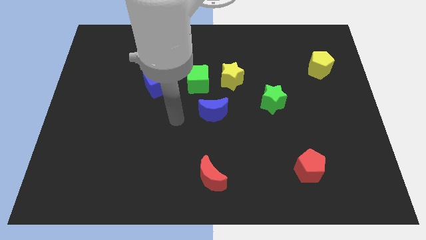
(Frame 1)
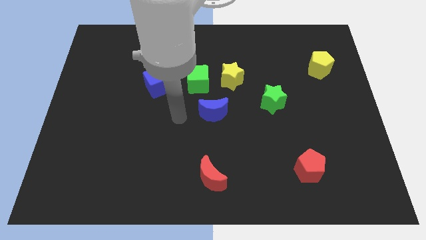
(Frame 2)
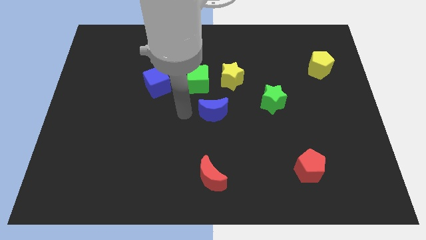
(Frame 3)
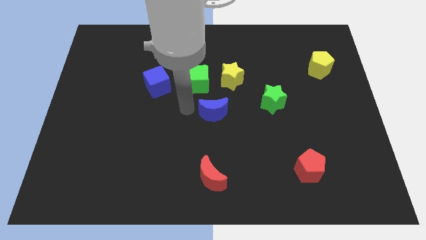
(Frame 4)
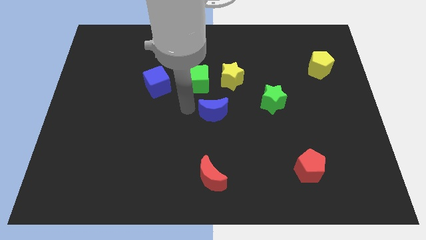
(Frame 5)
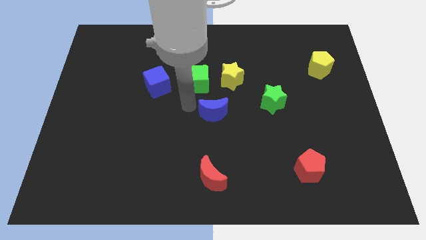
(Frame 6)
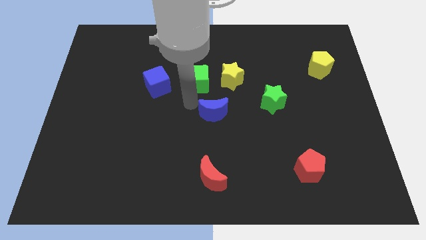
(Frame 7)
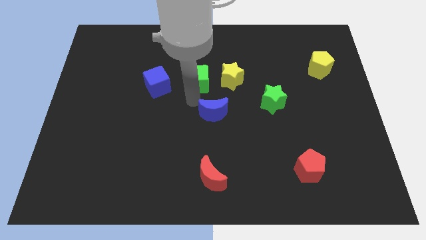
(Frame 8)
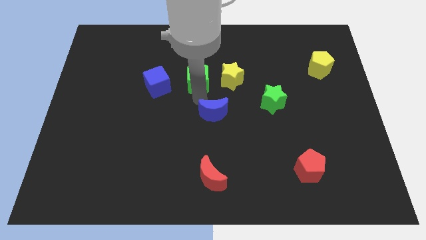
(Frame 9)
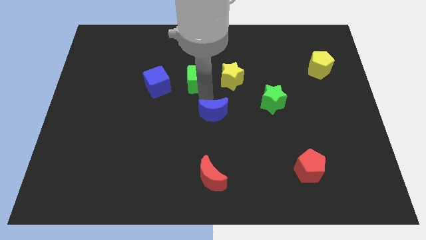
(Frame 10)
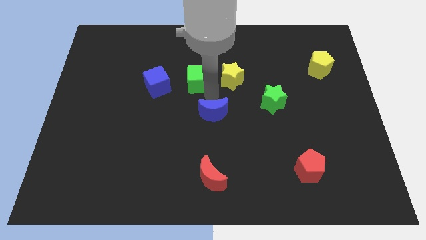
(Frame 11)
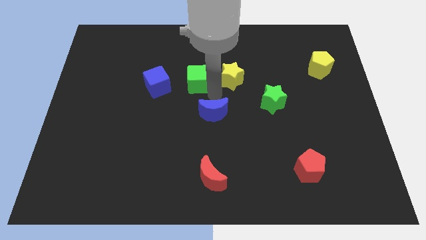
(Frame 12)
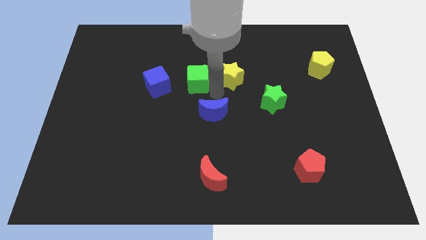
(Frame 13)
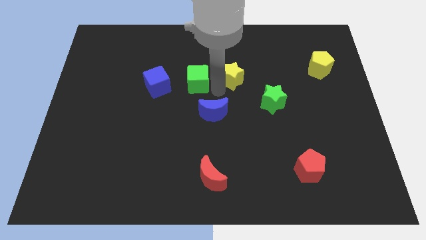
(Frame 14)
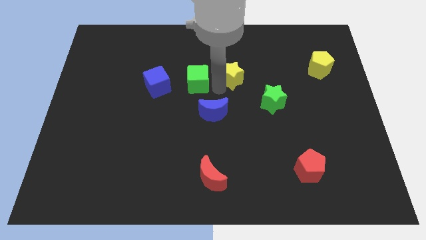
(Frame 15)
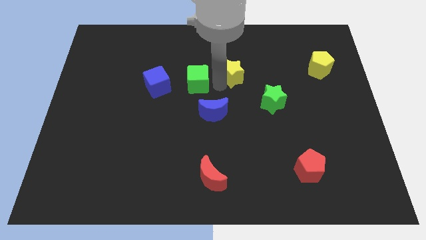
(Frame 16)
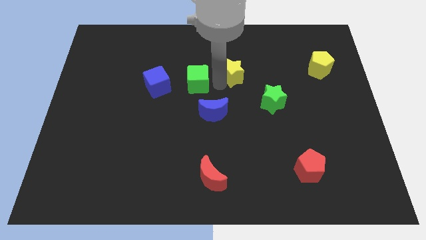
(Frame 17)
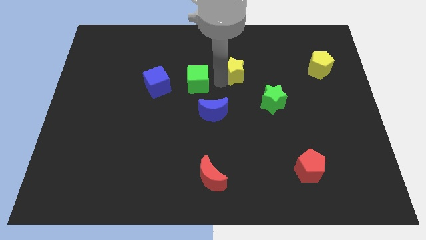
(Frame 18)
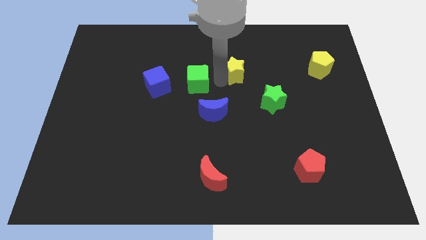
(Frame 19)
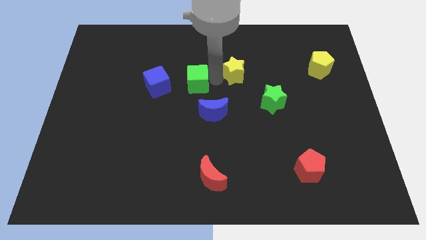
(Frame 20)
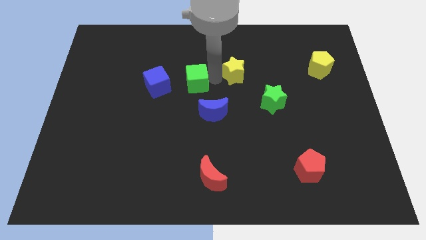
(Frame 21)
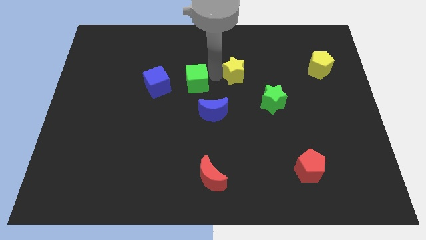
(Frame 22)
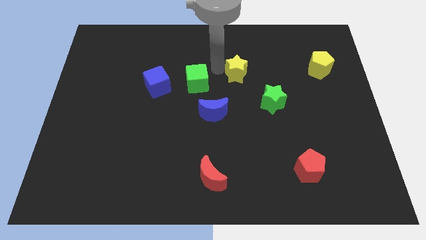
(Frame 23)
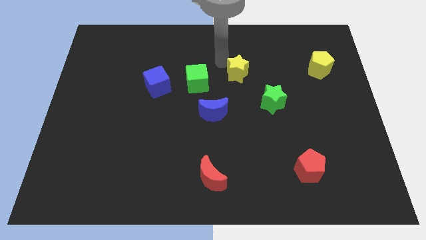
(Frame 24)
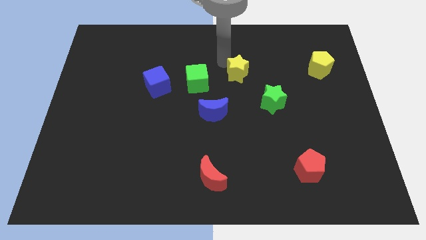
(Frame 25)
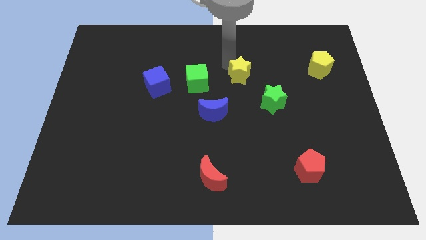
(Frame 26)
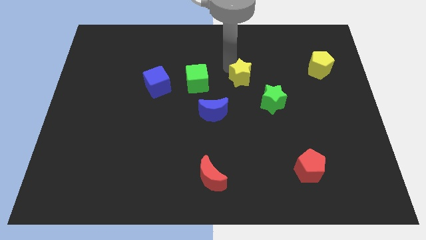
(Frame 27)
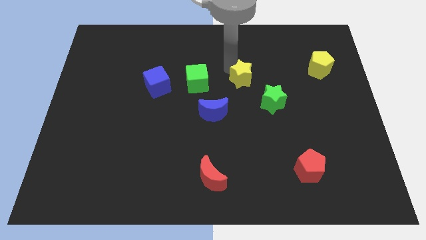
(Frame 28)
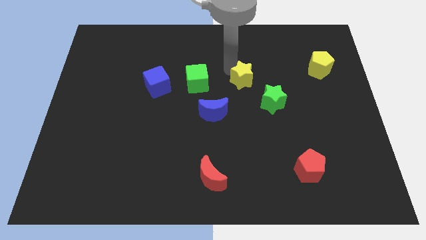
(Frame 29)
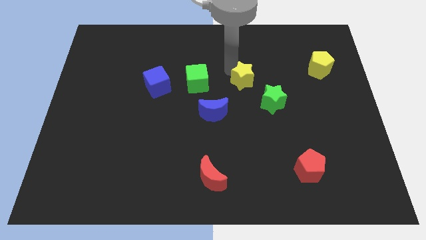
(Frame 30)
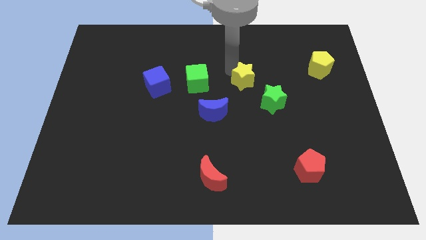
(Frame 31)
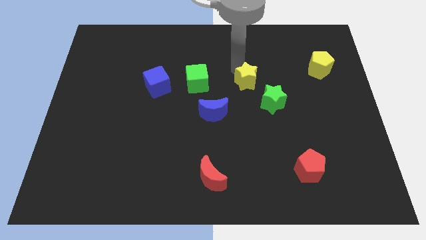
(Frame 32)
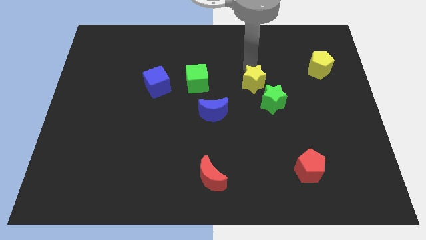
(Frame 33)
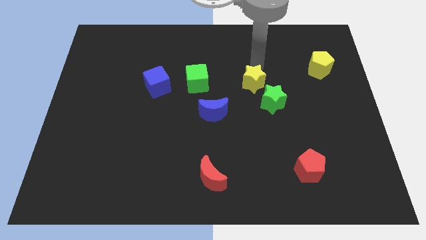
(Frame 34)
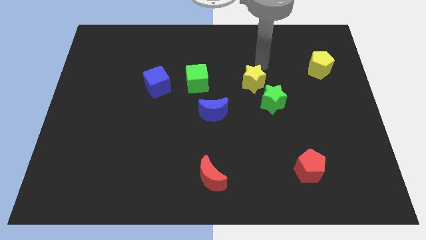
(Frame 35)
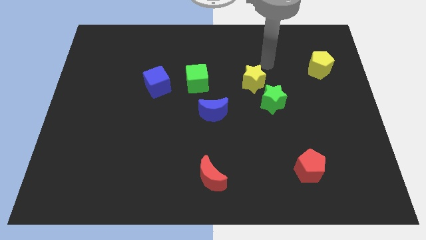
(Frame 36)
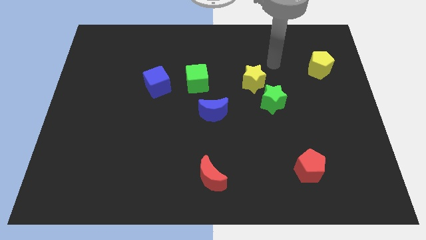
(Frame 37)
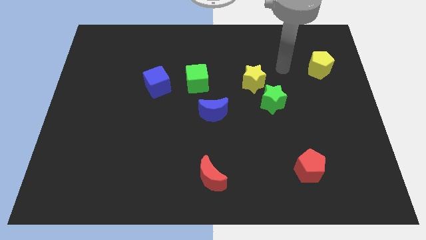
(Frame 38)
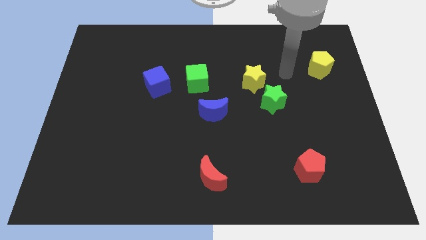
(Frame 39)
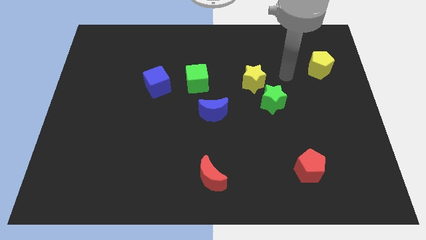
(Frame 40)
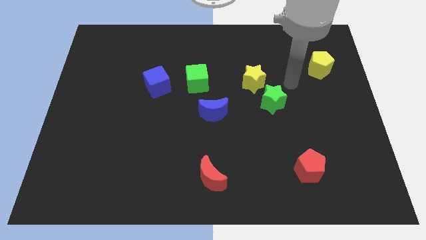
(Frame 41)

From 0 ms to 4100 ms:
place the yellow star to the top left of green star

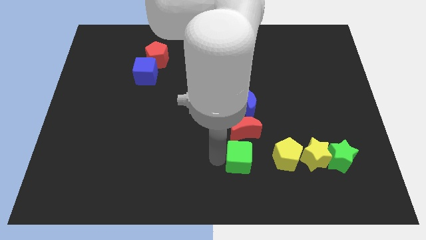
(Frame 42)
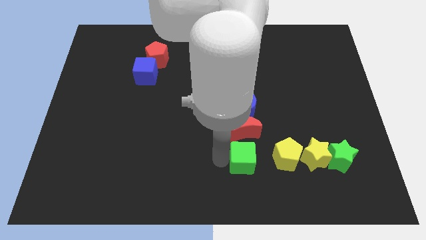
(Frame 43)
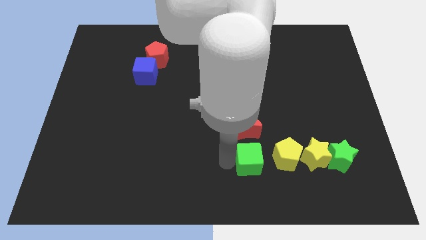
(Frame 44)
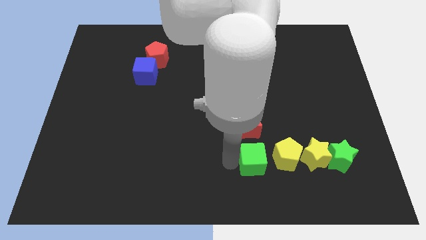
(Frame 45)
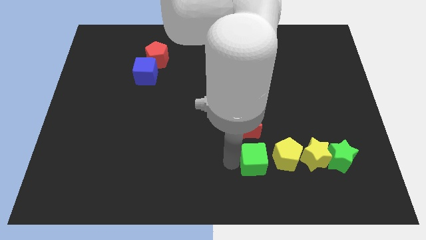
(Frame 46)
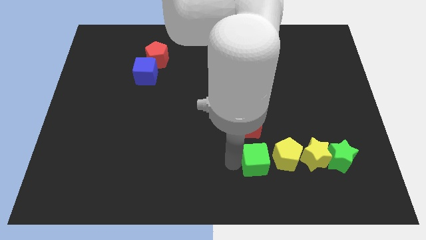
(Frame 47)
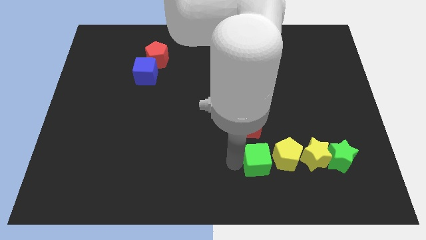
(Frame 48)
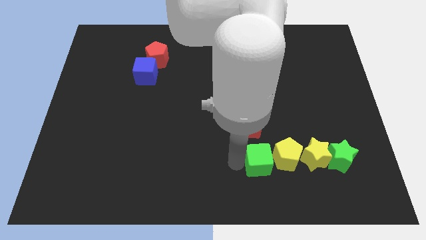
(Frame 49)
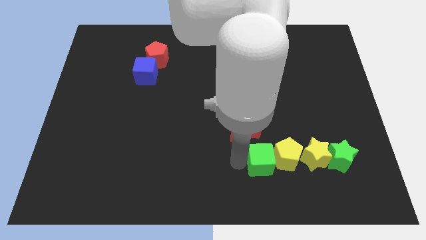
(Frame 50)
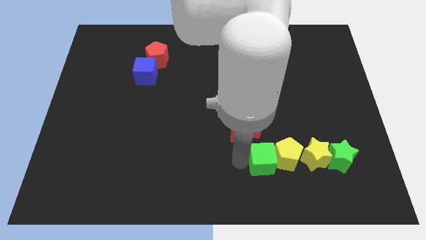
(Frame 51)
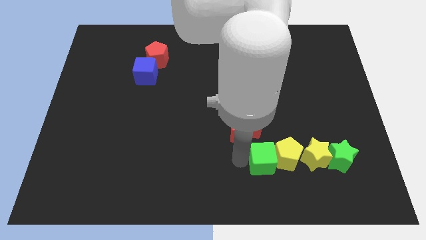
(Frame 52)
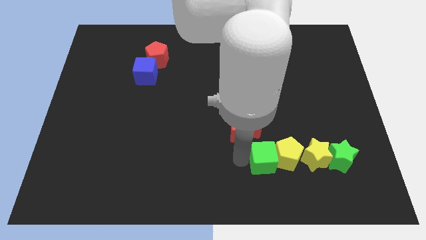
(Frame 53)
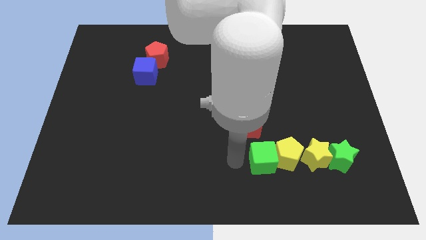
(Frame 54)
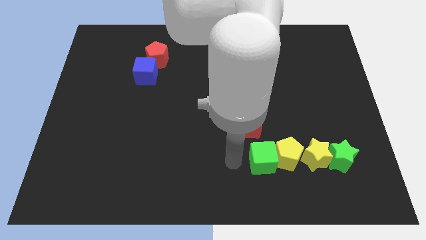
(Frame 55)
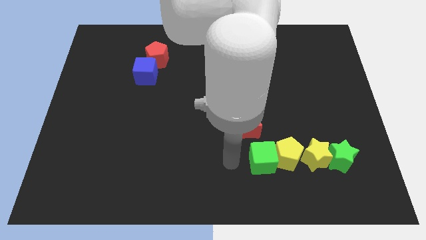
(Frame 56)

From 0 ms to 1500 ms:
push the green cube into the yellow pentagon

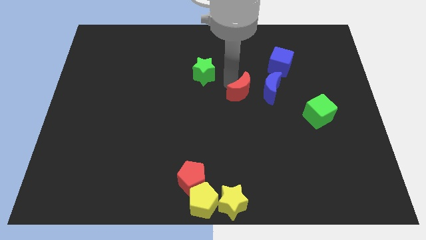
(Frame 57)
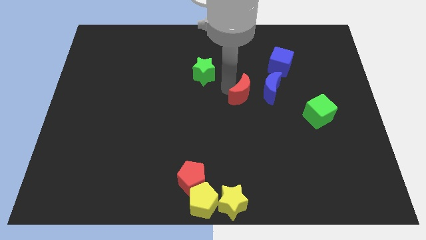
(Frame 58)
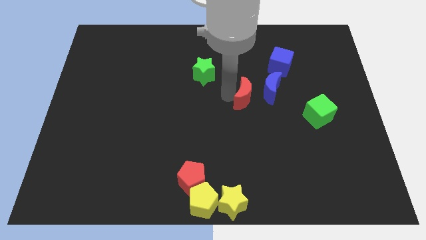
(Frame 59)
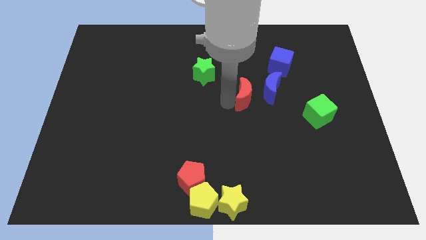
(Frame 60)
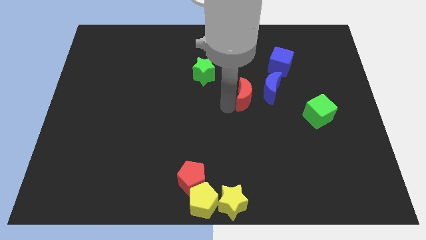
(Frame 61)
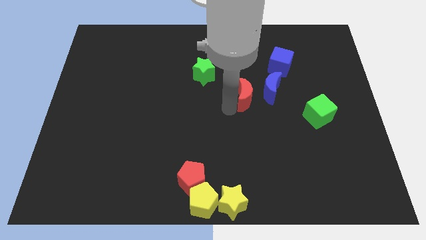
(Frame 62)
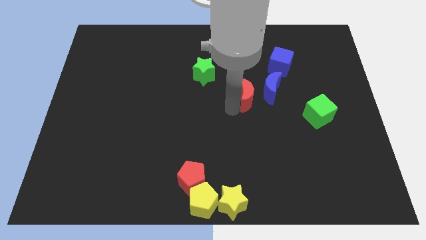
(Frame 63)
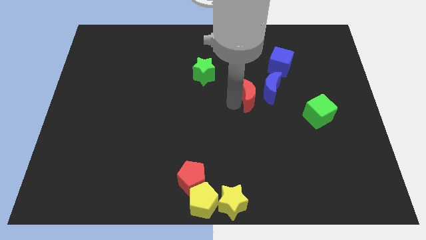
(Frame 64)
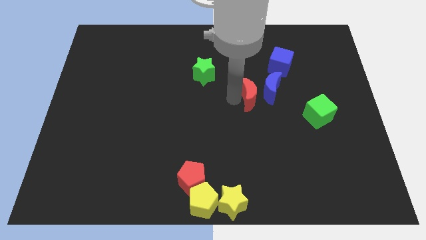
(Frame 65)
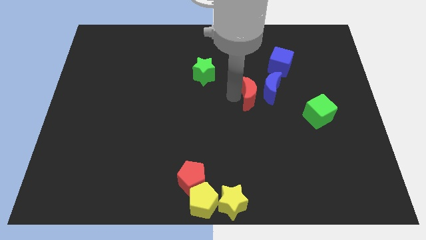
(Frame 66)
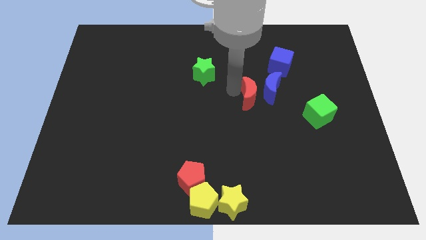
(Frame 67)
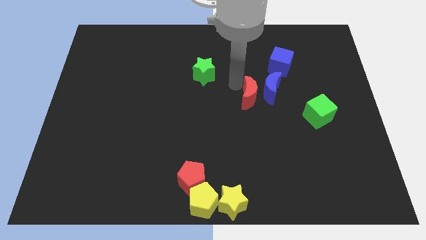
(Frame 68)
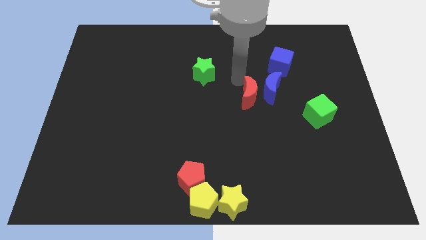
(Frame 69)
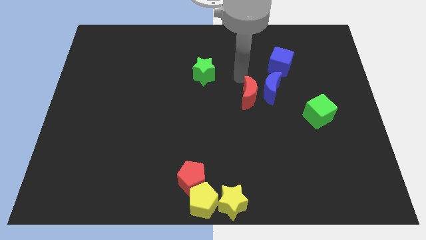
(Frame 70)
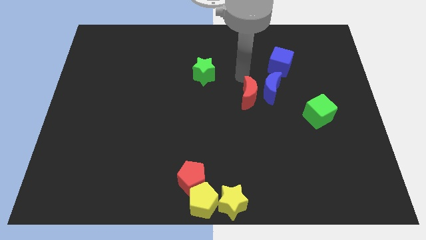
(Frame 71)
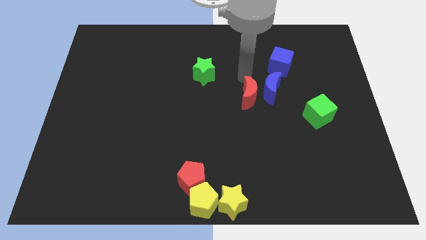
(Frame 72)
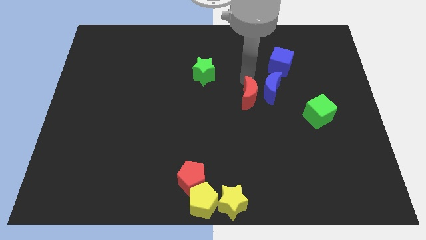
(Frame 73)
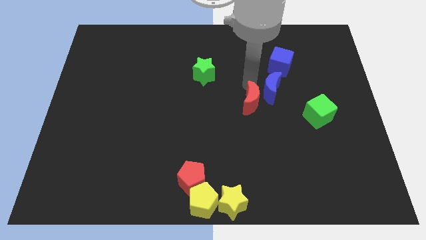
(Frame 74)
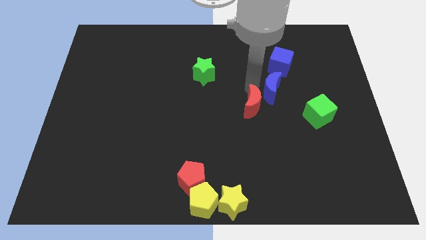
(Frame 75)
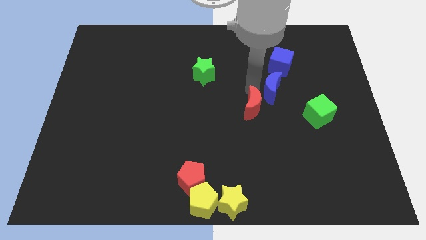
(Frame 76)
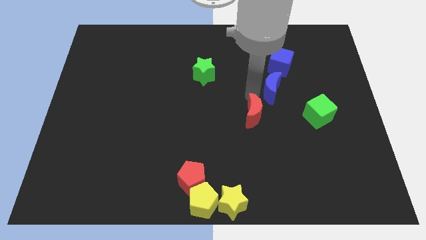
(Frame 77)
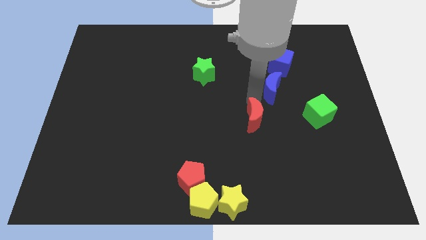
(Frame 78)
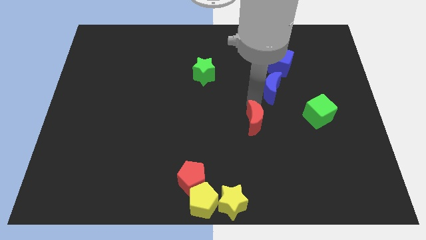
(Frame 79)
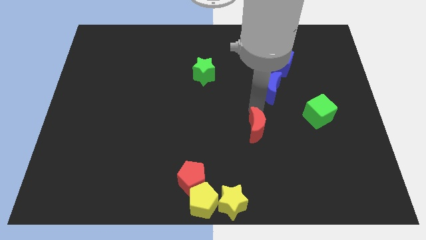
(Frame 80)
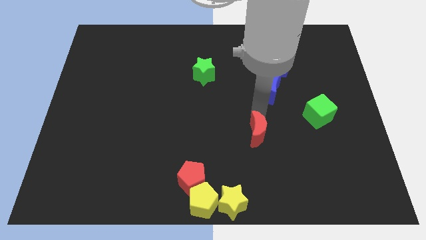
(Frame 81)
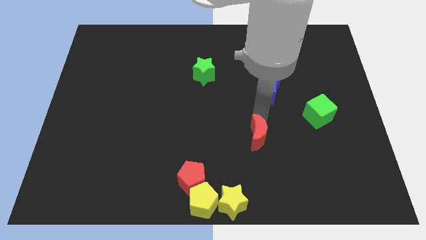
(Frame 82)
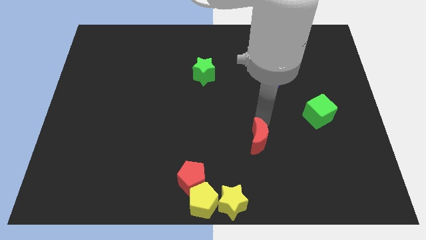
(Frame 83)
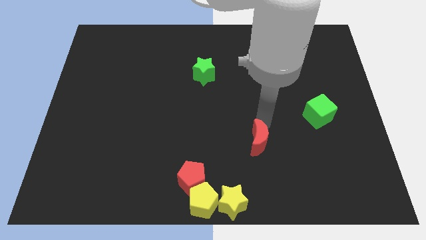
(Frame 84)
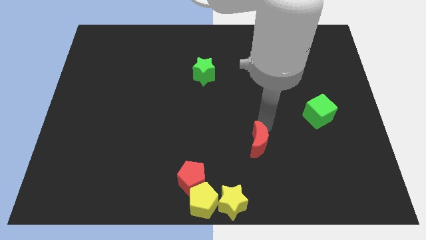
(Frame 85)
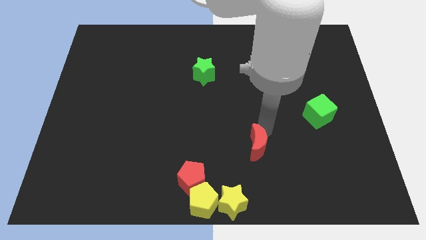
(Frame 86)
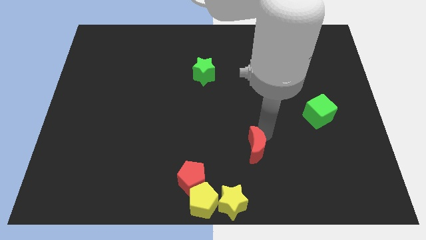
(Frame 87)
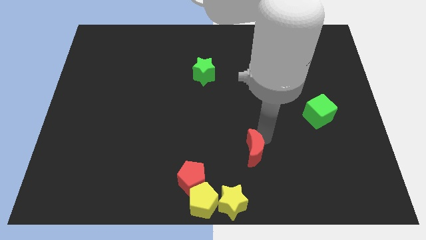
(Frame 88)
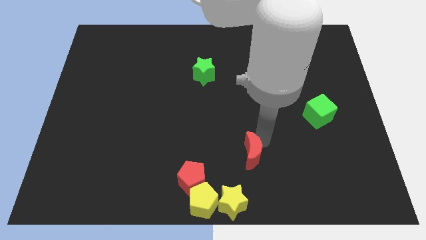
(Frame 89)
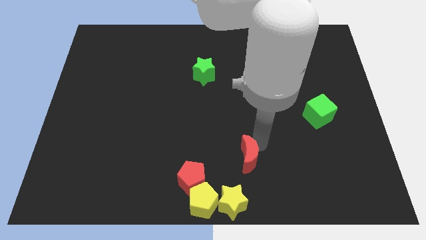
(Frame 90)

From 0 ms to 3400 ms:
move the red crescent to the bottom left of the green cube
